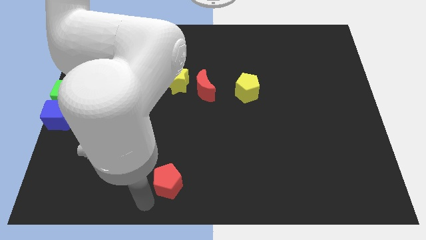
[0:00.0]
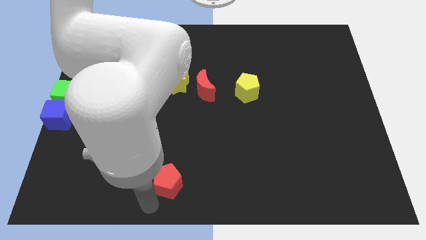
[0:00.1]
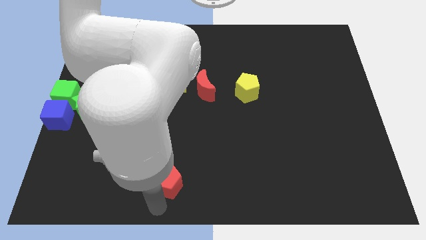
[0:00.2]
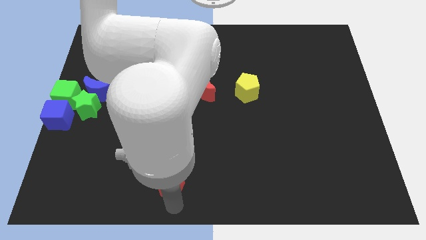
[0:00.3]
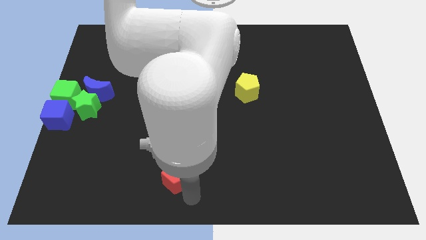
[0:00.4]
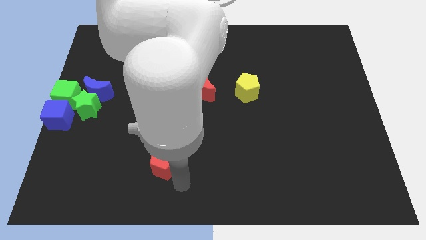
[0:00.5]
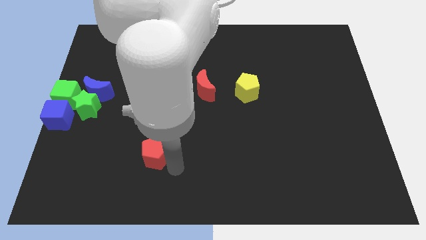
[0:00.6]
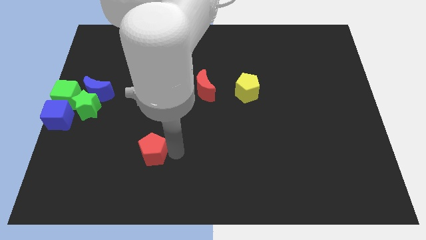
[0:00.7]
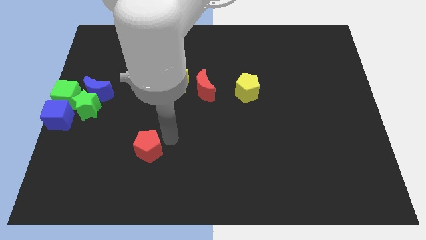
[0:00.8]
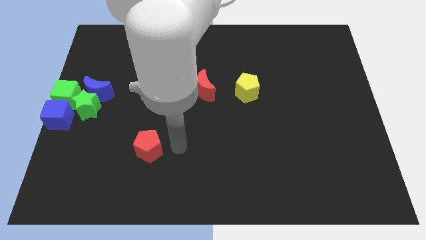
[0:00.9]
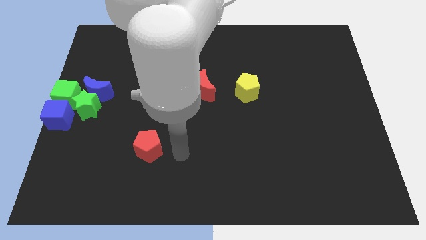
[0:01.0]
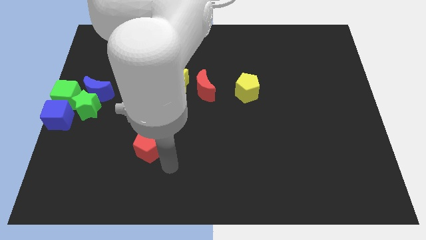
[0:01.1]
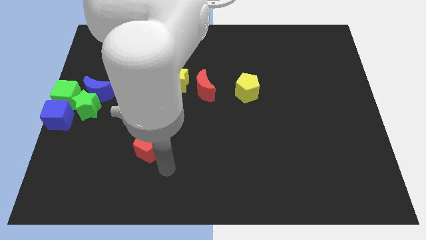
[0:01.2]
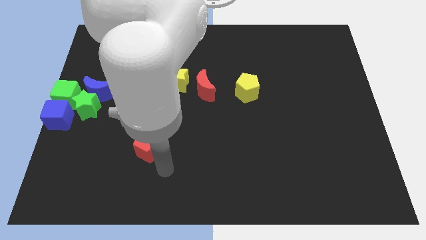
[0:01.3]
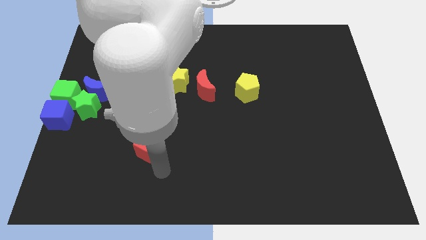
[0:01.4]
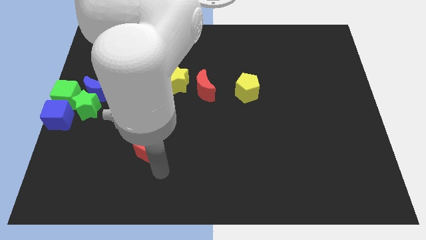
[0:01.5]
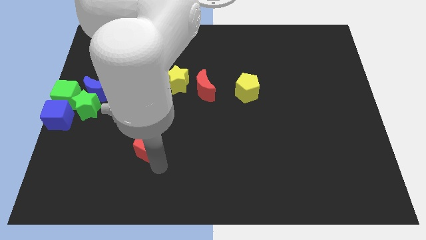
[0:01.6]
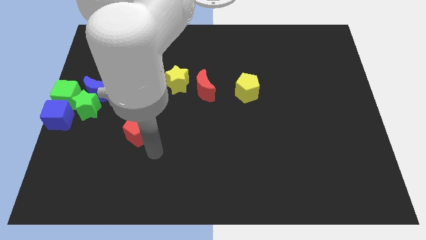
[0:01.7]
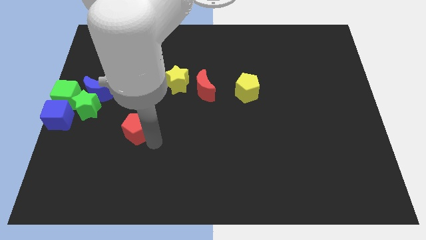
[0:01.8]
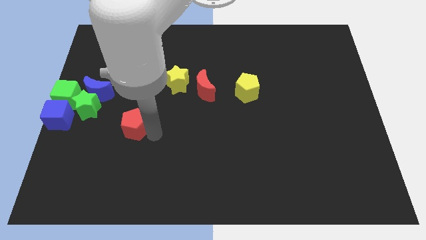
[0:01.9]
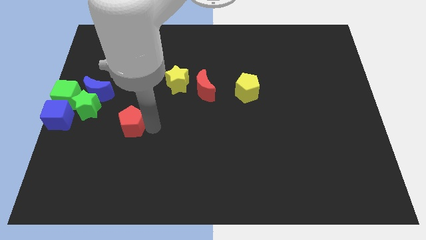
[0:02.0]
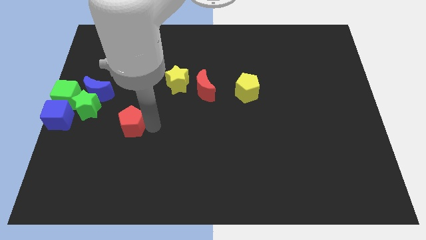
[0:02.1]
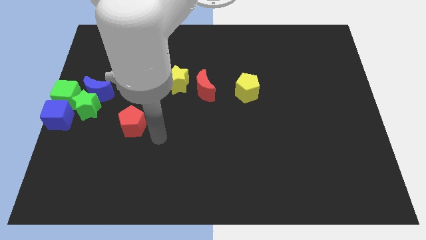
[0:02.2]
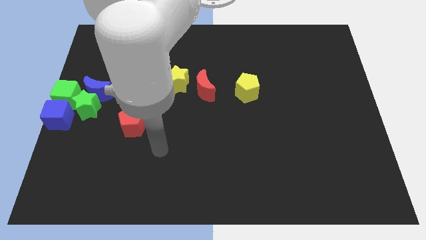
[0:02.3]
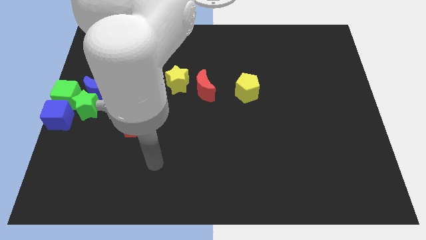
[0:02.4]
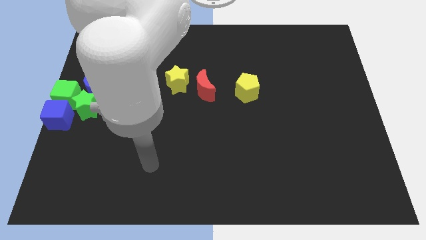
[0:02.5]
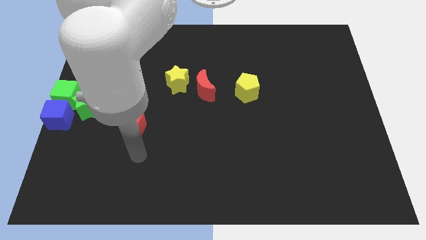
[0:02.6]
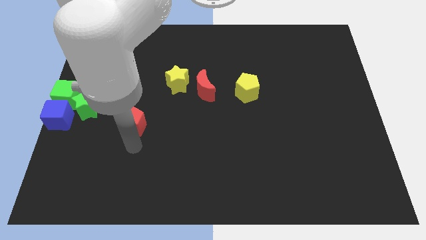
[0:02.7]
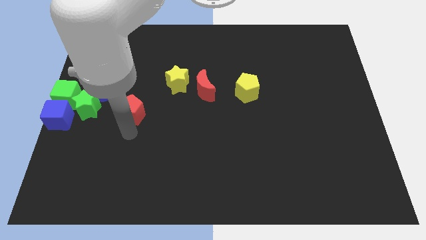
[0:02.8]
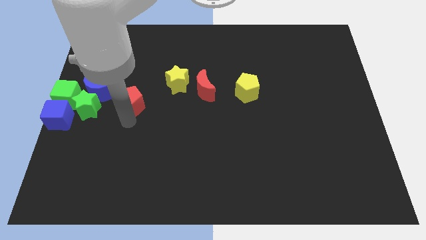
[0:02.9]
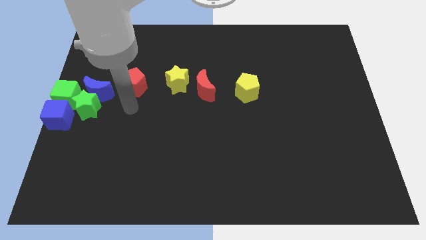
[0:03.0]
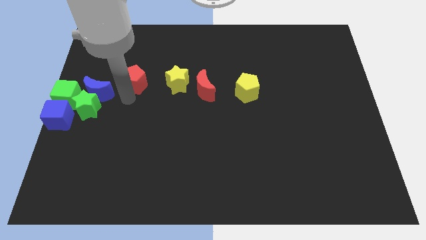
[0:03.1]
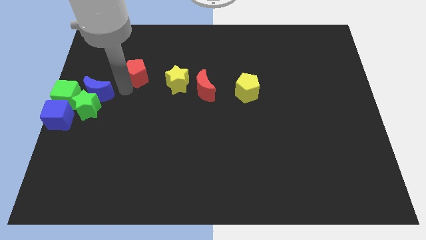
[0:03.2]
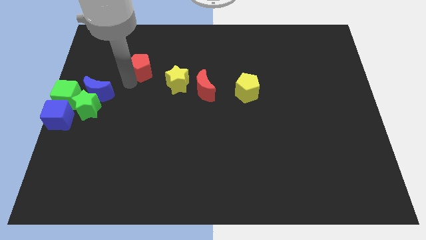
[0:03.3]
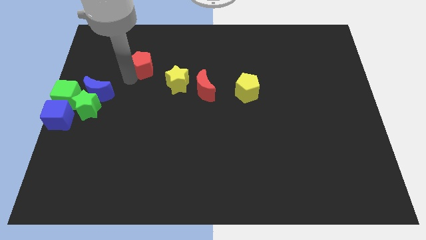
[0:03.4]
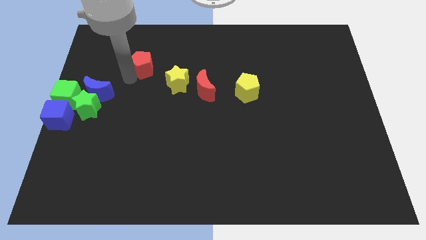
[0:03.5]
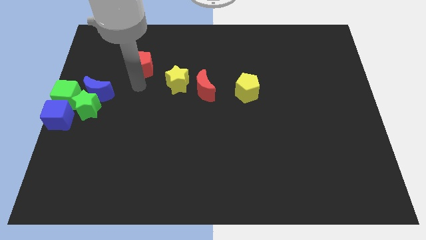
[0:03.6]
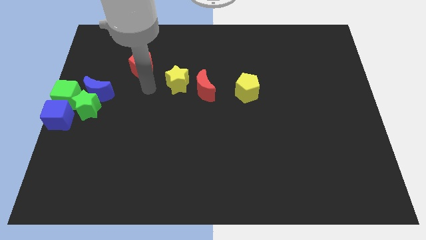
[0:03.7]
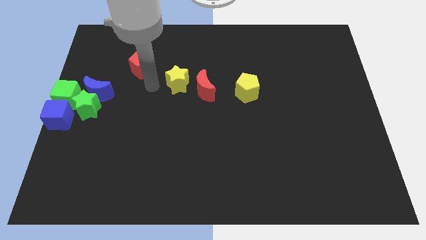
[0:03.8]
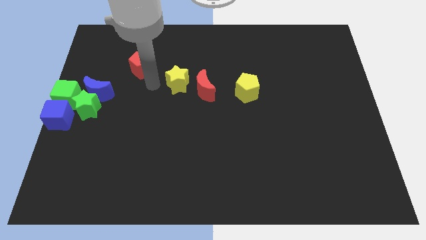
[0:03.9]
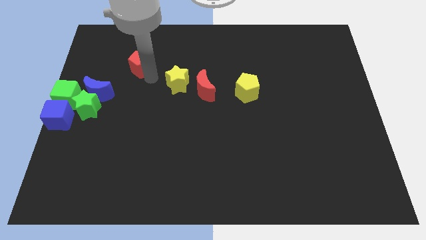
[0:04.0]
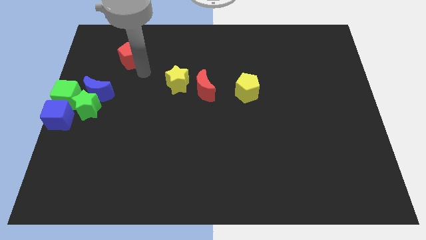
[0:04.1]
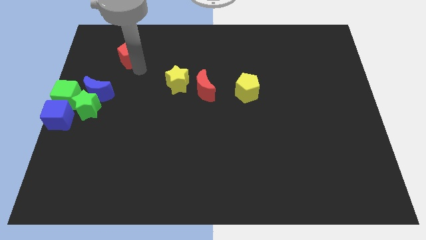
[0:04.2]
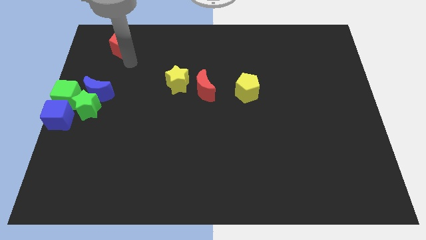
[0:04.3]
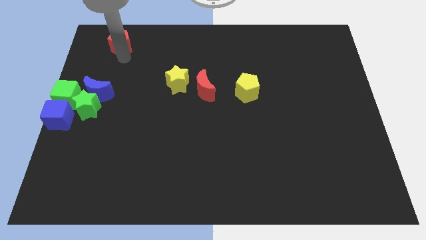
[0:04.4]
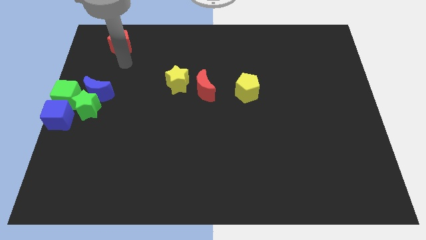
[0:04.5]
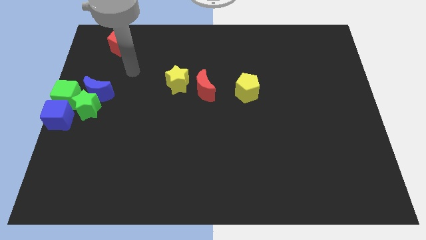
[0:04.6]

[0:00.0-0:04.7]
move the red pentagon towards top left

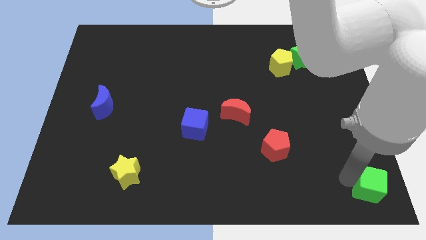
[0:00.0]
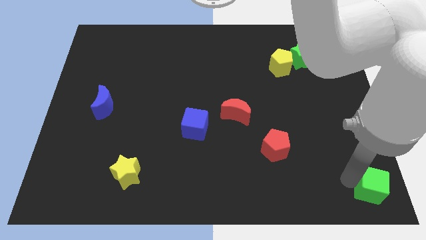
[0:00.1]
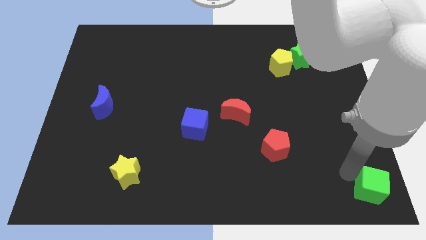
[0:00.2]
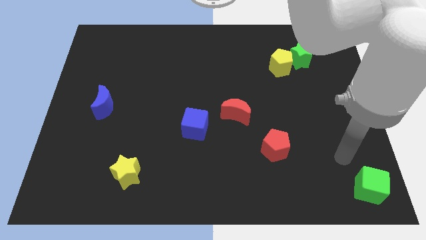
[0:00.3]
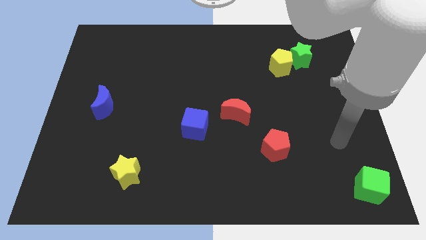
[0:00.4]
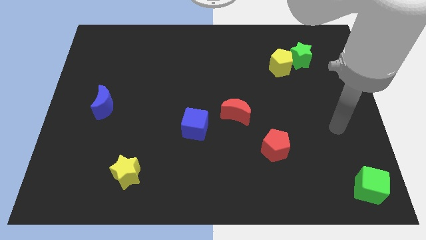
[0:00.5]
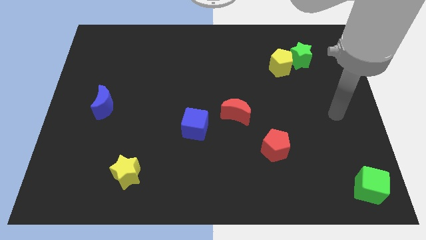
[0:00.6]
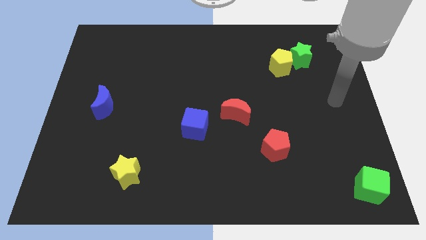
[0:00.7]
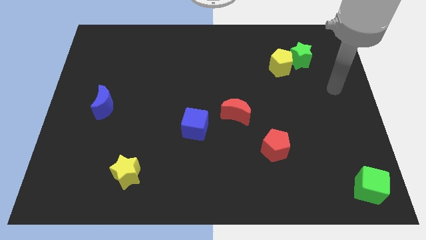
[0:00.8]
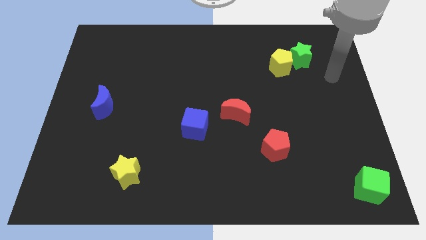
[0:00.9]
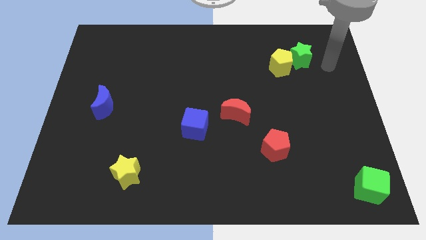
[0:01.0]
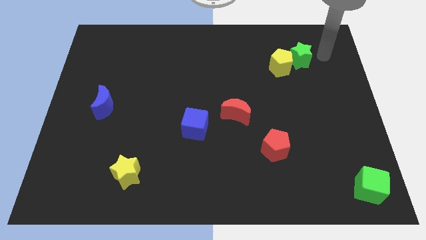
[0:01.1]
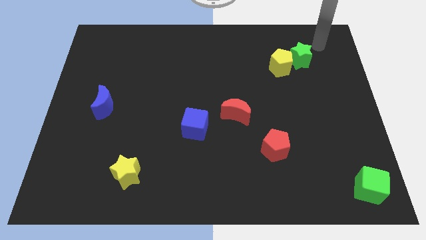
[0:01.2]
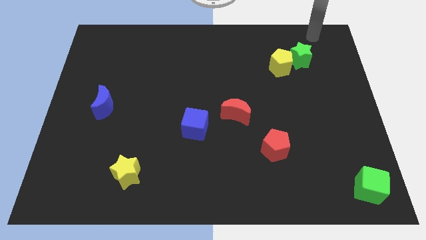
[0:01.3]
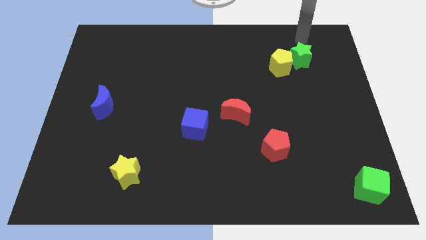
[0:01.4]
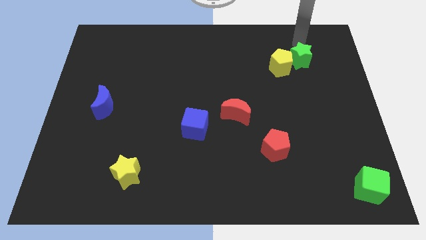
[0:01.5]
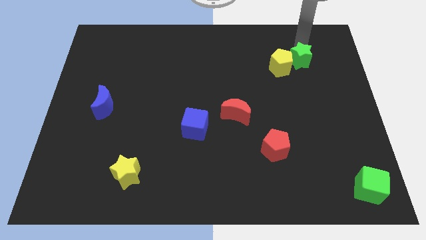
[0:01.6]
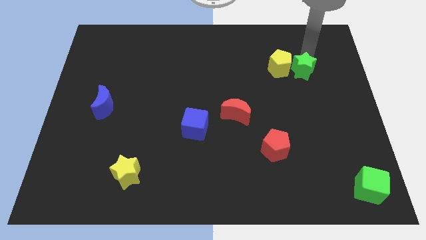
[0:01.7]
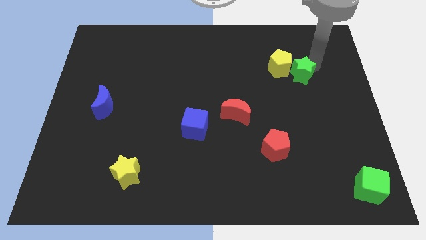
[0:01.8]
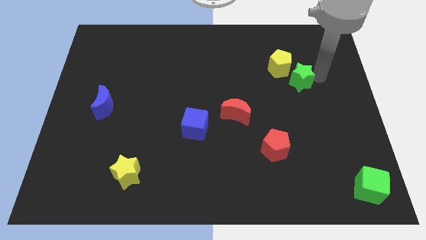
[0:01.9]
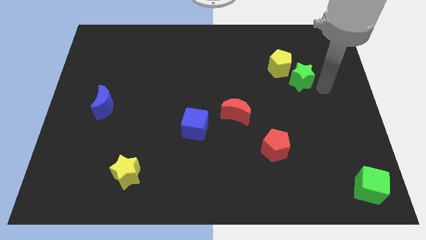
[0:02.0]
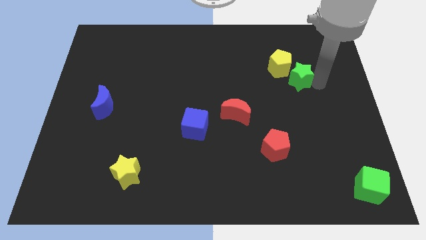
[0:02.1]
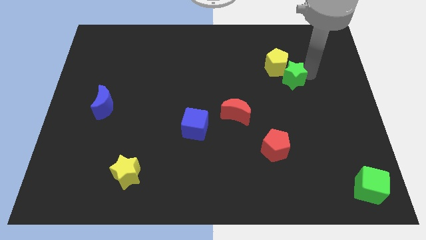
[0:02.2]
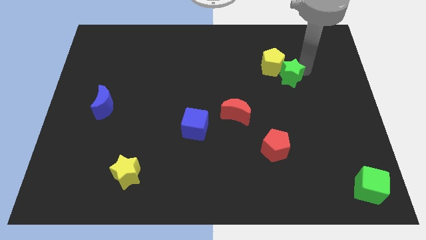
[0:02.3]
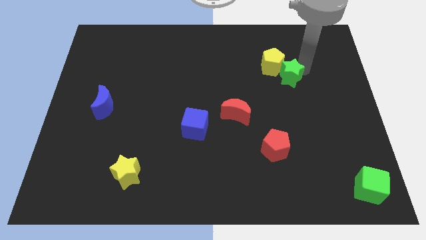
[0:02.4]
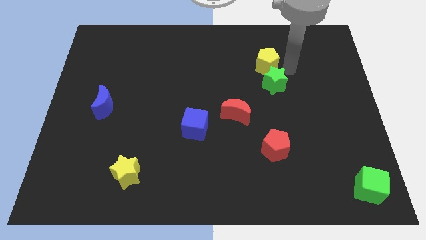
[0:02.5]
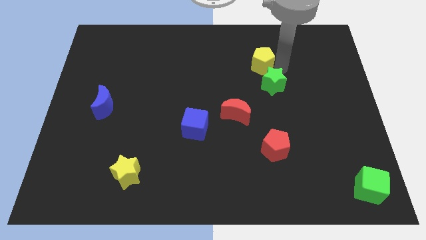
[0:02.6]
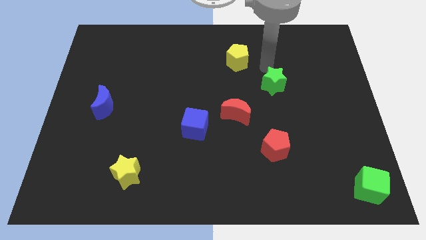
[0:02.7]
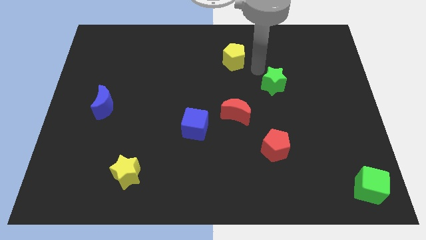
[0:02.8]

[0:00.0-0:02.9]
separate the green star and yellow pentagon

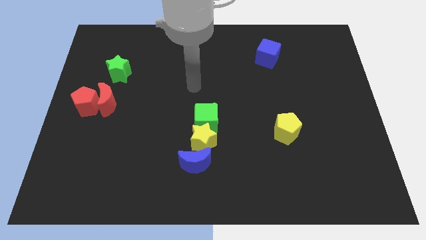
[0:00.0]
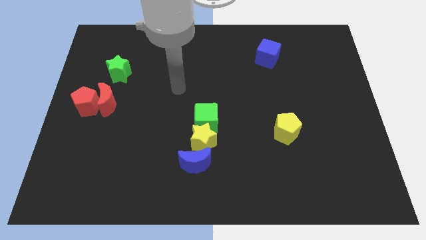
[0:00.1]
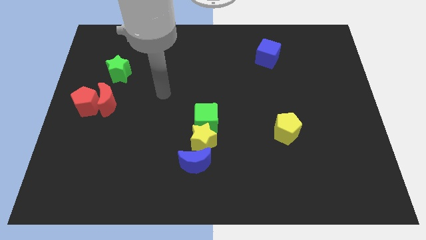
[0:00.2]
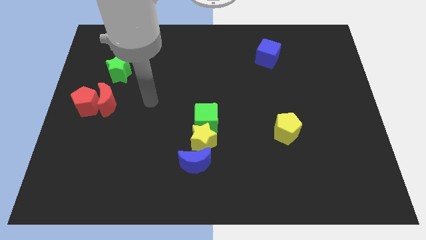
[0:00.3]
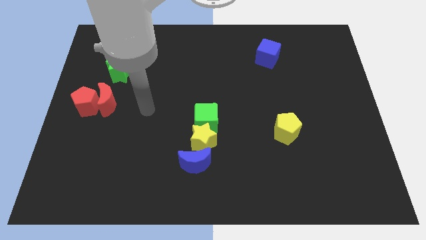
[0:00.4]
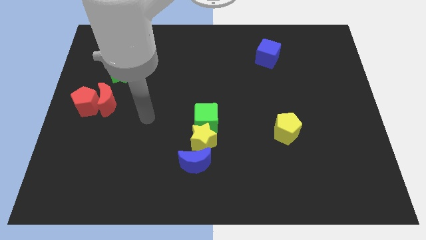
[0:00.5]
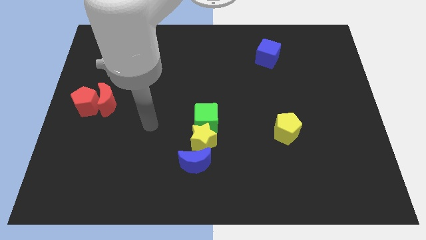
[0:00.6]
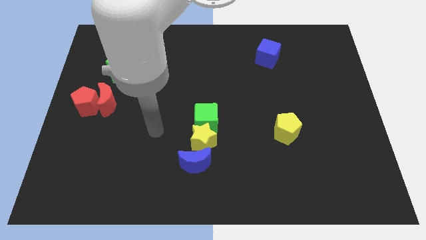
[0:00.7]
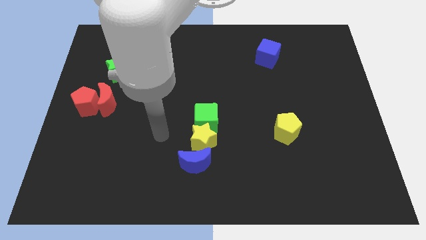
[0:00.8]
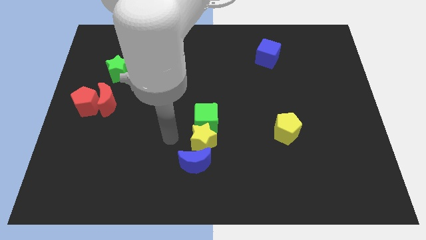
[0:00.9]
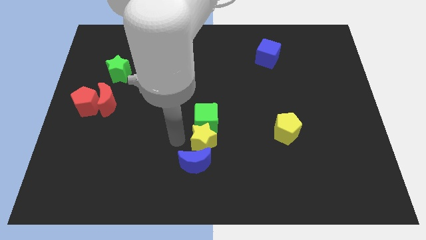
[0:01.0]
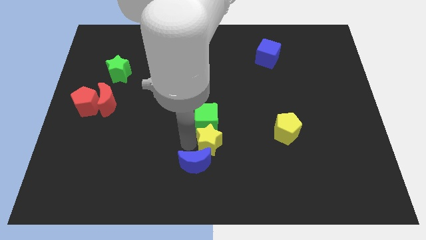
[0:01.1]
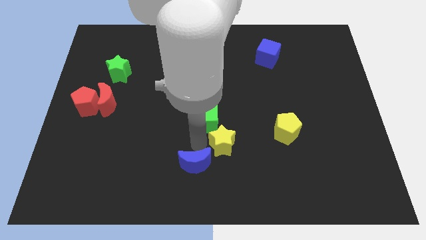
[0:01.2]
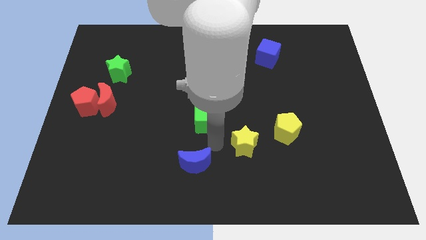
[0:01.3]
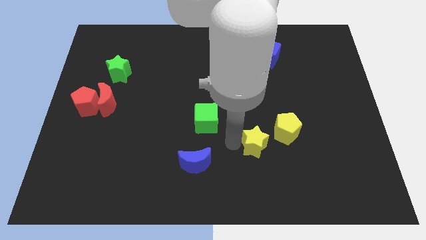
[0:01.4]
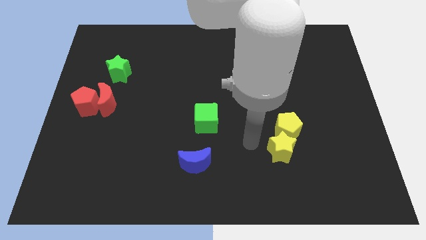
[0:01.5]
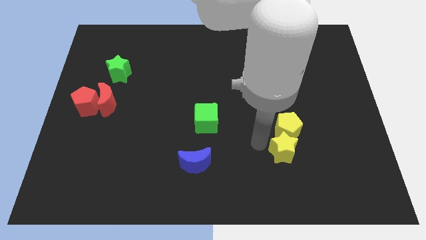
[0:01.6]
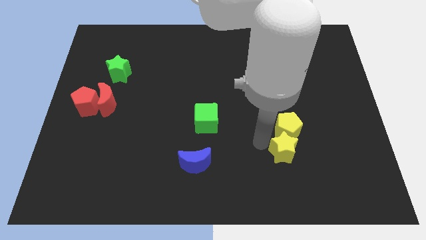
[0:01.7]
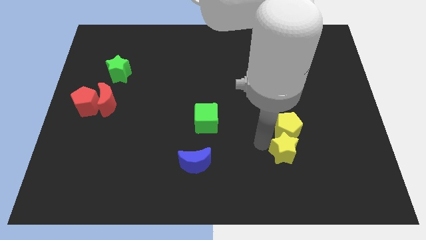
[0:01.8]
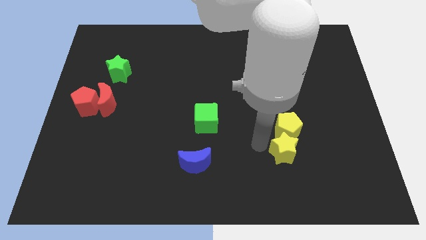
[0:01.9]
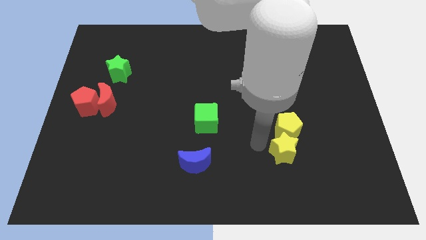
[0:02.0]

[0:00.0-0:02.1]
put the yellow star below the yellow pentagon
